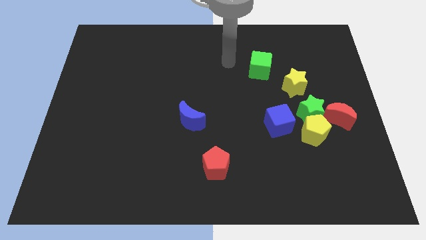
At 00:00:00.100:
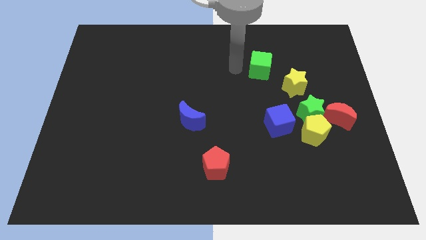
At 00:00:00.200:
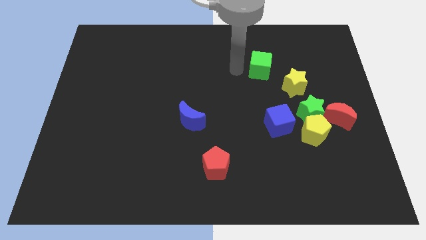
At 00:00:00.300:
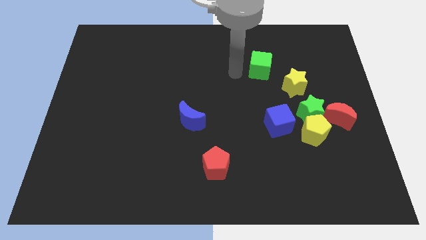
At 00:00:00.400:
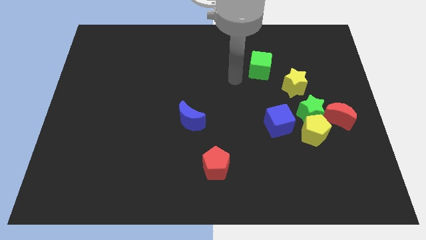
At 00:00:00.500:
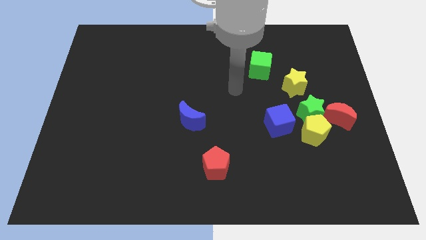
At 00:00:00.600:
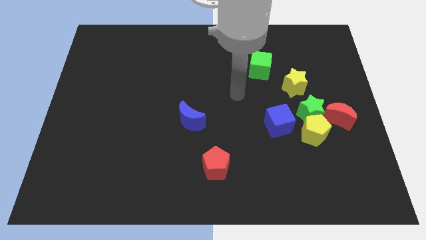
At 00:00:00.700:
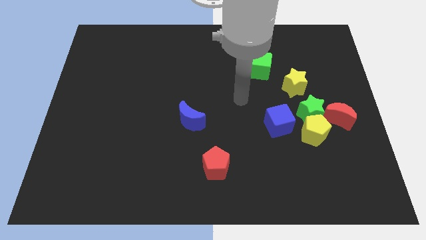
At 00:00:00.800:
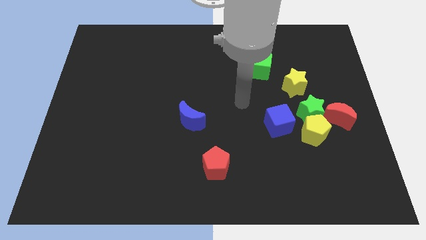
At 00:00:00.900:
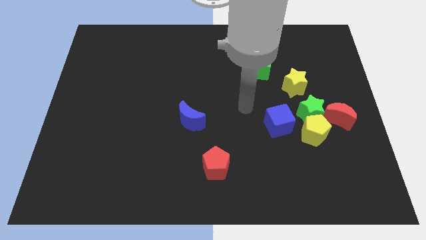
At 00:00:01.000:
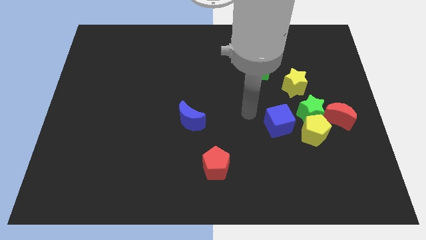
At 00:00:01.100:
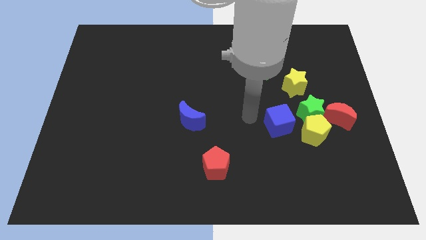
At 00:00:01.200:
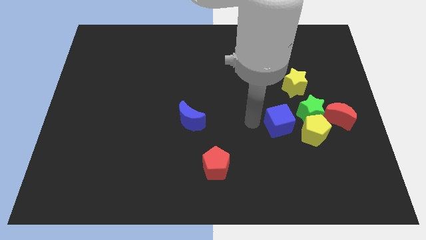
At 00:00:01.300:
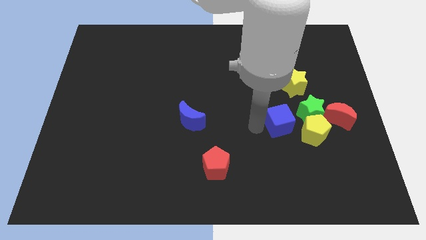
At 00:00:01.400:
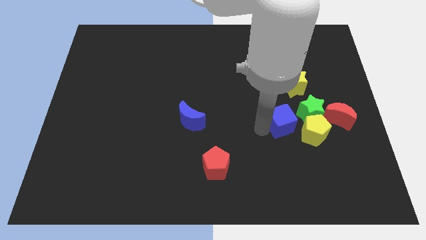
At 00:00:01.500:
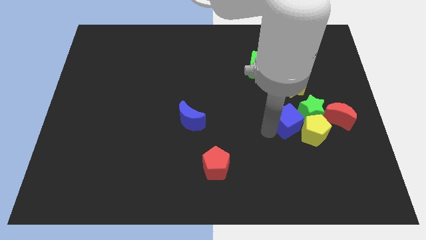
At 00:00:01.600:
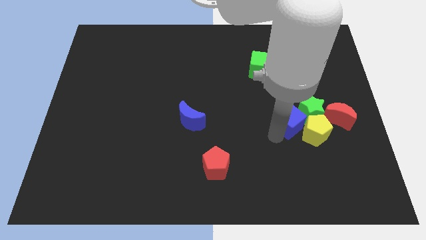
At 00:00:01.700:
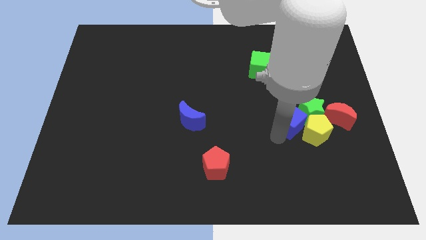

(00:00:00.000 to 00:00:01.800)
move the blue cube to the group of blocks

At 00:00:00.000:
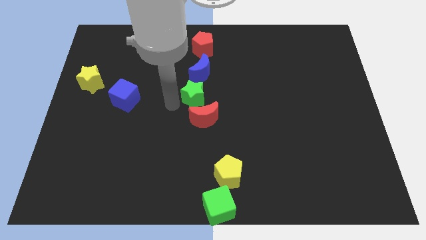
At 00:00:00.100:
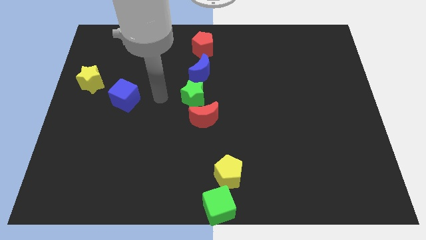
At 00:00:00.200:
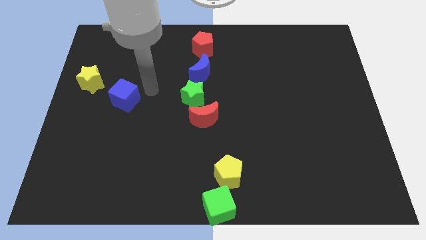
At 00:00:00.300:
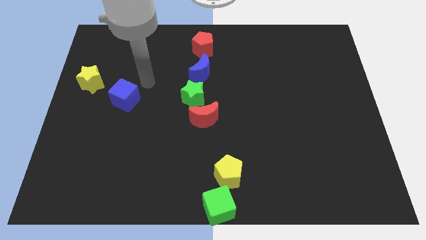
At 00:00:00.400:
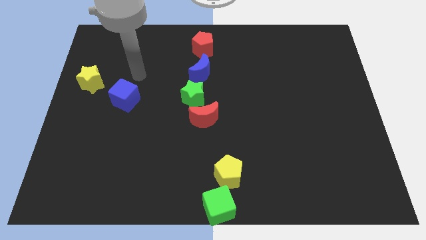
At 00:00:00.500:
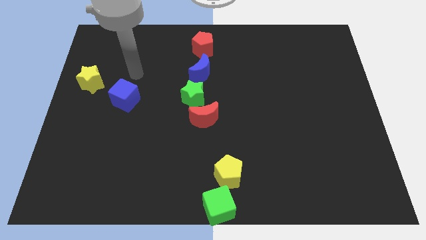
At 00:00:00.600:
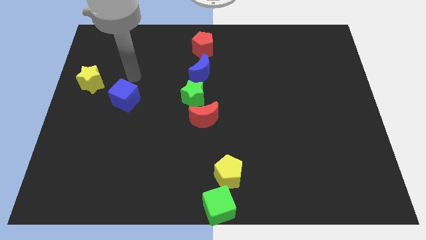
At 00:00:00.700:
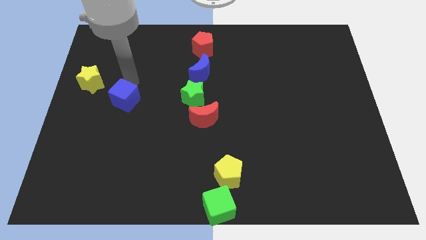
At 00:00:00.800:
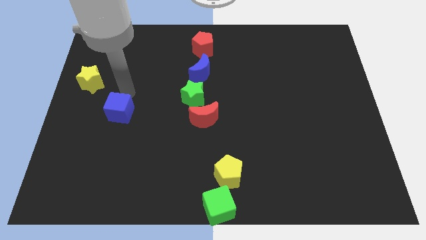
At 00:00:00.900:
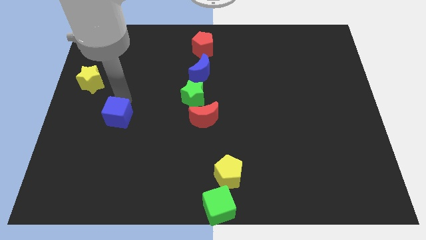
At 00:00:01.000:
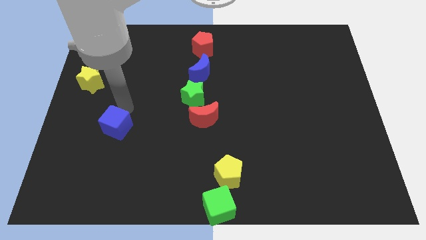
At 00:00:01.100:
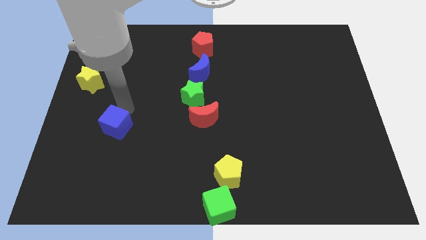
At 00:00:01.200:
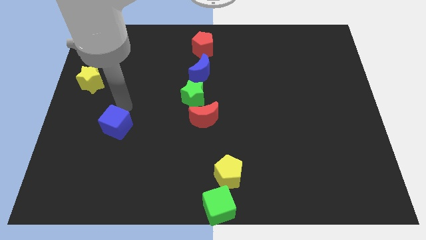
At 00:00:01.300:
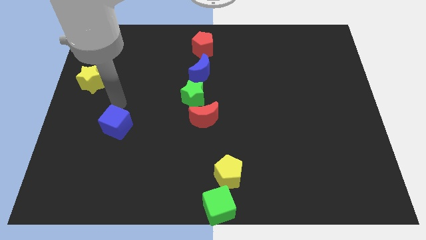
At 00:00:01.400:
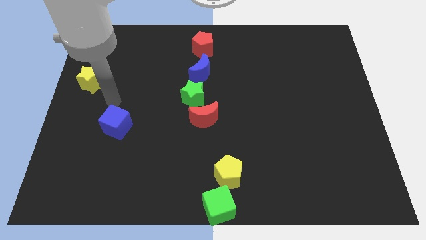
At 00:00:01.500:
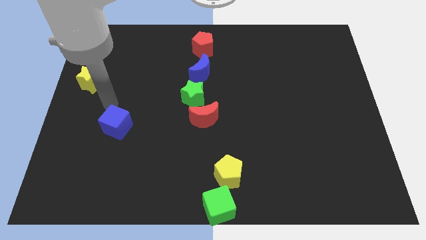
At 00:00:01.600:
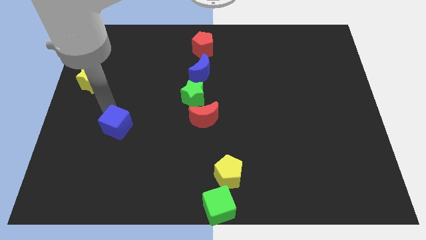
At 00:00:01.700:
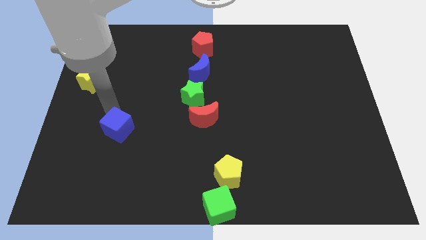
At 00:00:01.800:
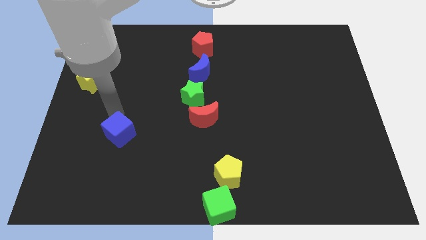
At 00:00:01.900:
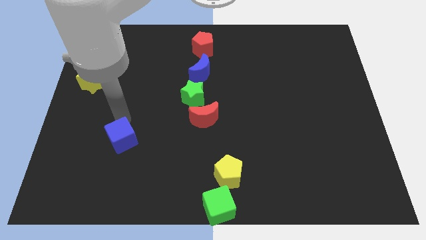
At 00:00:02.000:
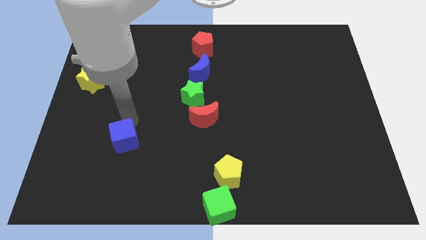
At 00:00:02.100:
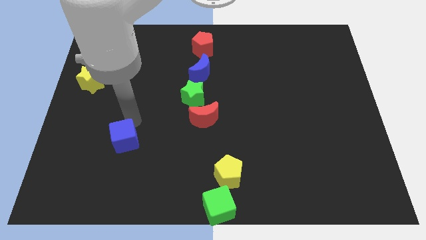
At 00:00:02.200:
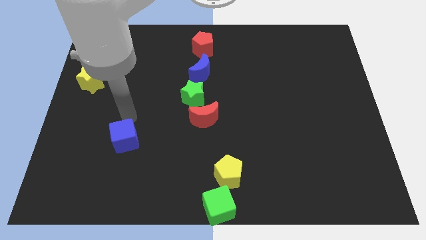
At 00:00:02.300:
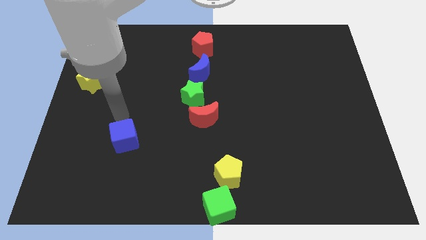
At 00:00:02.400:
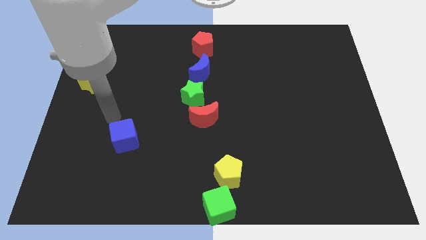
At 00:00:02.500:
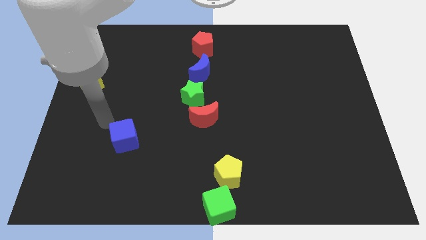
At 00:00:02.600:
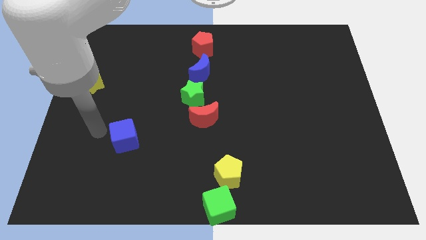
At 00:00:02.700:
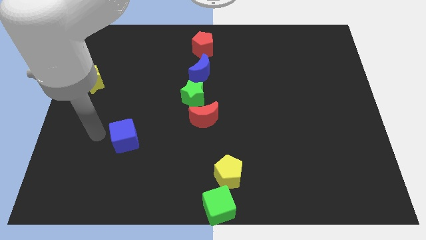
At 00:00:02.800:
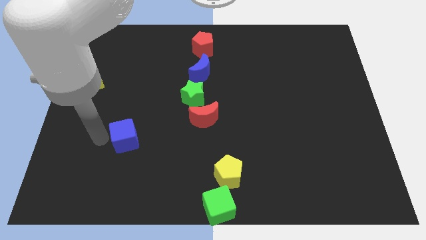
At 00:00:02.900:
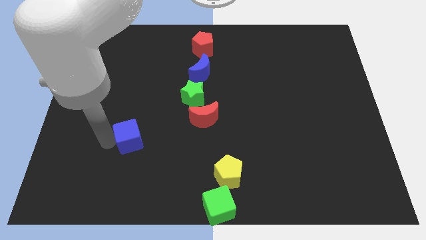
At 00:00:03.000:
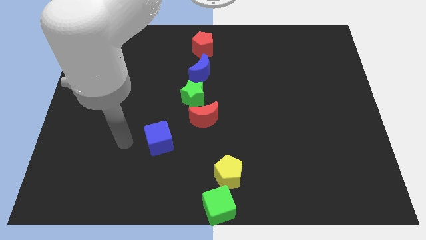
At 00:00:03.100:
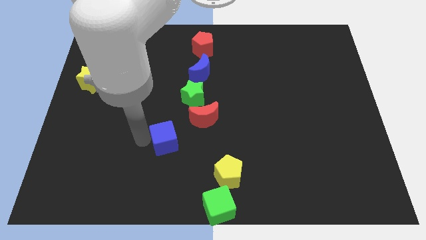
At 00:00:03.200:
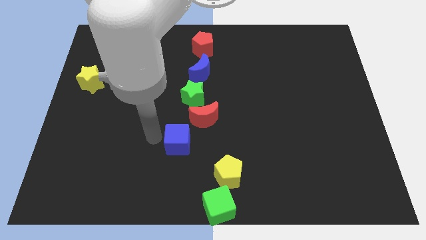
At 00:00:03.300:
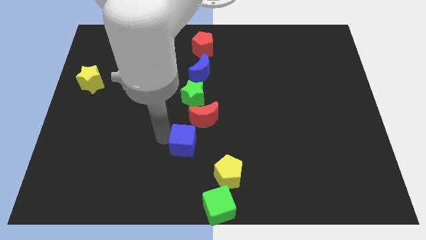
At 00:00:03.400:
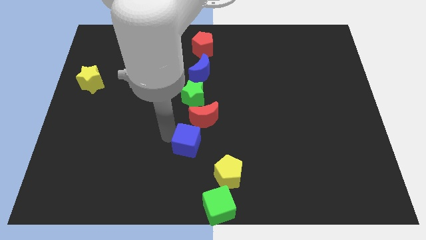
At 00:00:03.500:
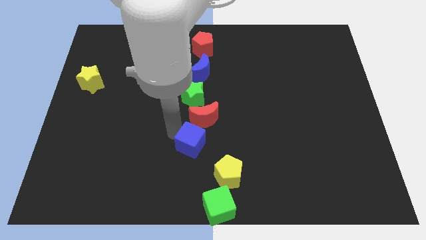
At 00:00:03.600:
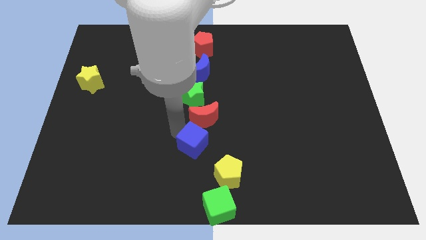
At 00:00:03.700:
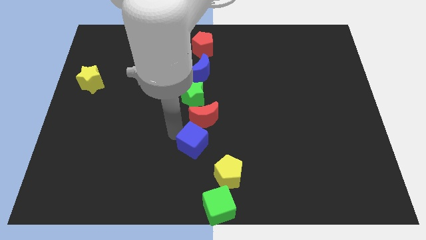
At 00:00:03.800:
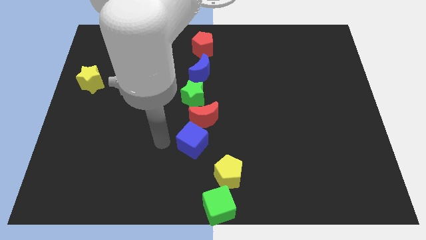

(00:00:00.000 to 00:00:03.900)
place blue cube to the bottom of red moon

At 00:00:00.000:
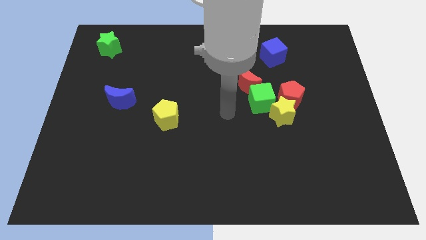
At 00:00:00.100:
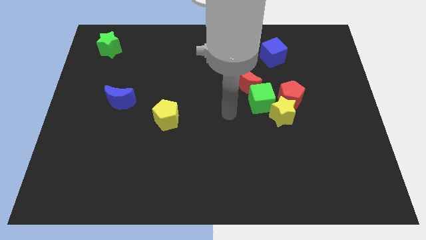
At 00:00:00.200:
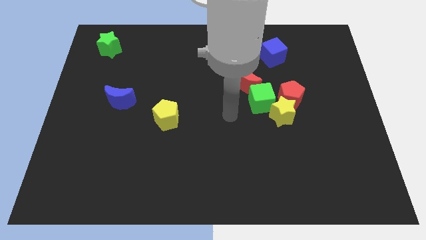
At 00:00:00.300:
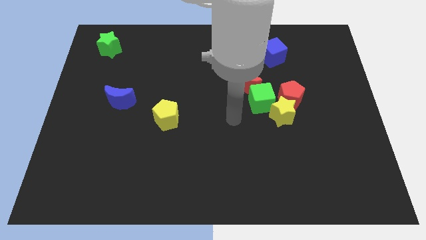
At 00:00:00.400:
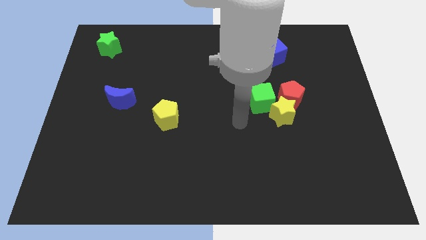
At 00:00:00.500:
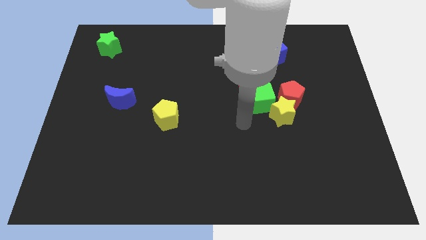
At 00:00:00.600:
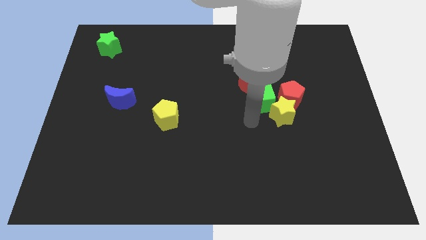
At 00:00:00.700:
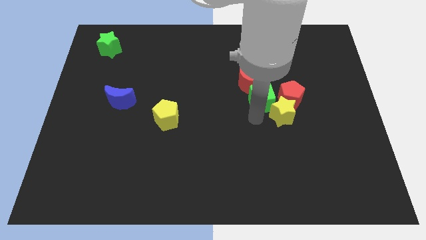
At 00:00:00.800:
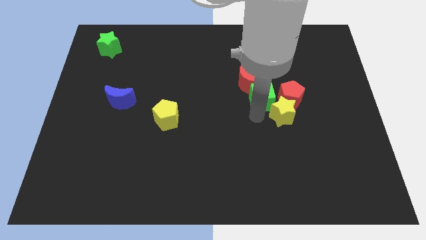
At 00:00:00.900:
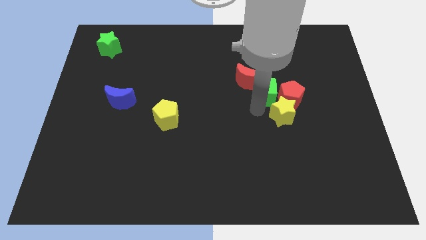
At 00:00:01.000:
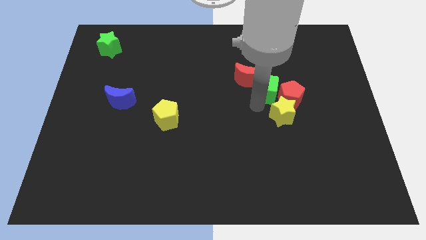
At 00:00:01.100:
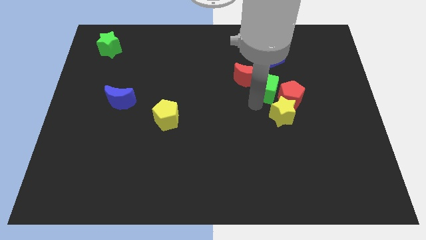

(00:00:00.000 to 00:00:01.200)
push green cube towards its top

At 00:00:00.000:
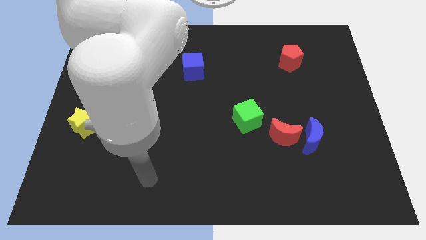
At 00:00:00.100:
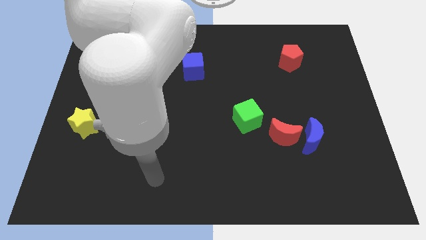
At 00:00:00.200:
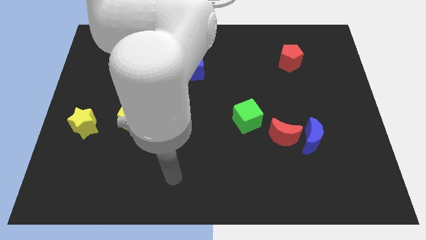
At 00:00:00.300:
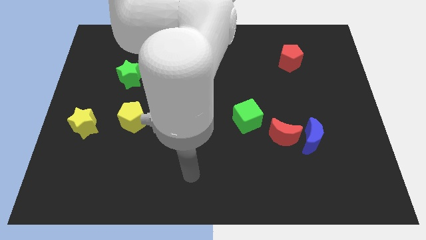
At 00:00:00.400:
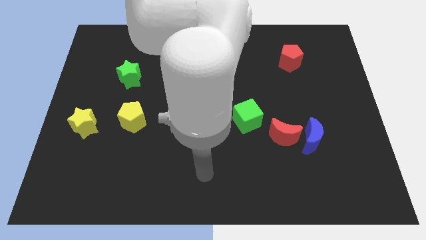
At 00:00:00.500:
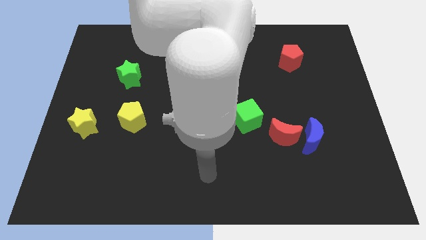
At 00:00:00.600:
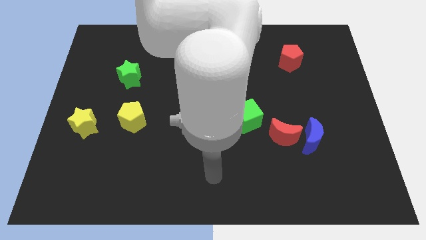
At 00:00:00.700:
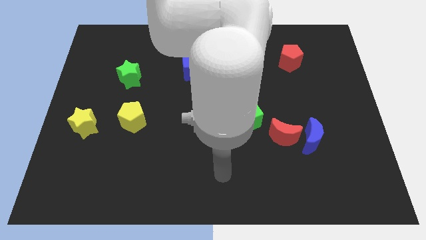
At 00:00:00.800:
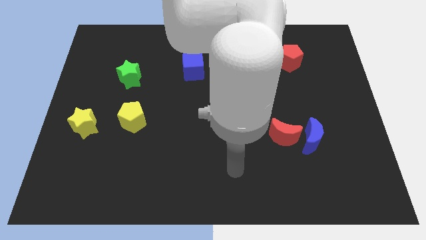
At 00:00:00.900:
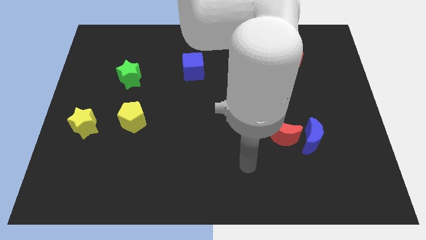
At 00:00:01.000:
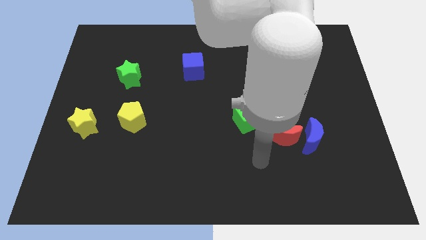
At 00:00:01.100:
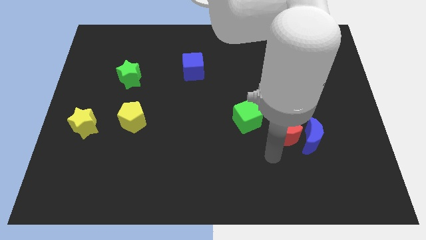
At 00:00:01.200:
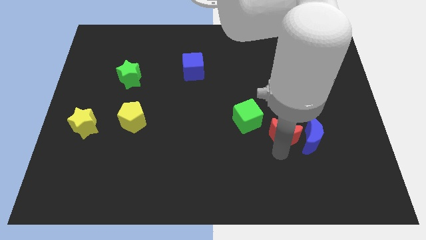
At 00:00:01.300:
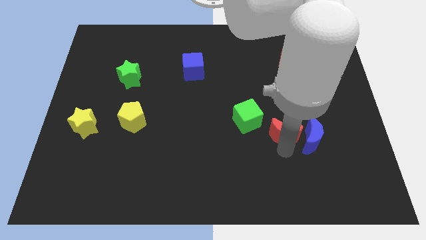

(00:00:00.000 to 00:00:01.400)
place the arm below the red moon

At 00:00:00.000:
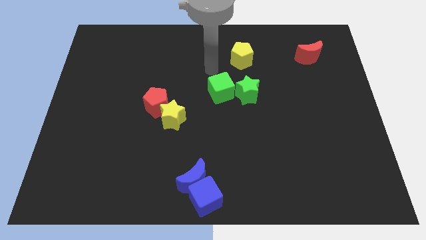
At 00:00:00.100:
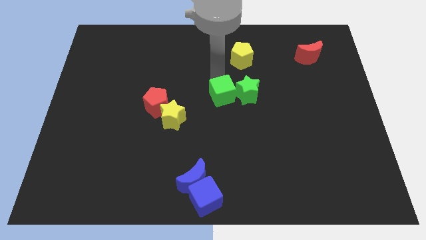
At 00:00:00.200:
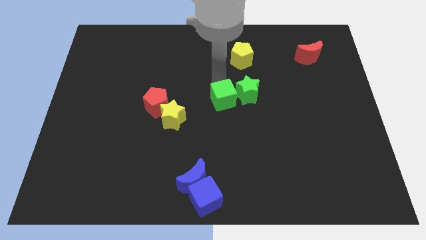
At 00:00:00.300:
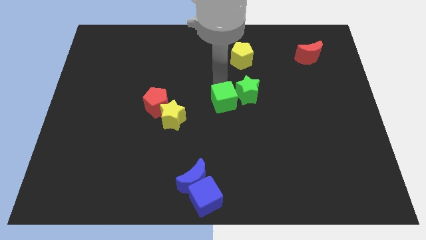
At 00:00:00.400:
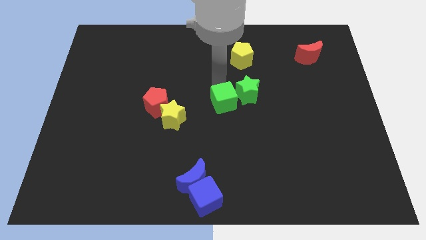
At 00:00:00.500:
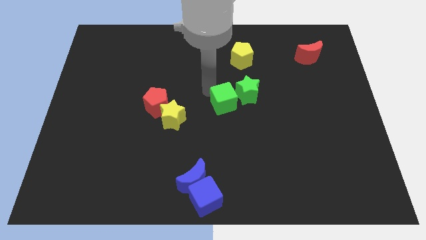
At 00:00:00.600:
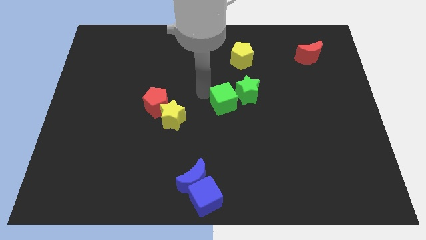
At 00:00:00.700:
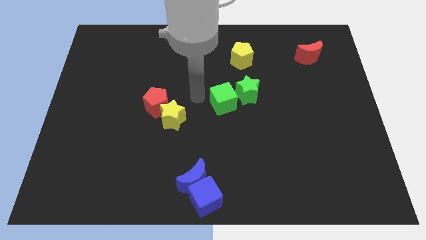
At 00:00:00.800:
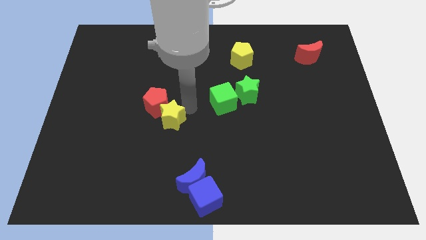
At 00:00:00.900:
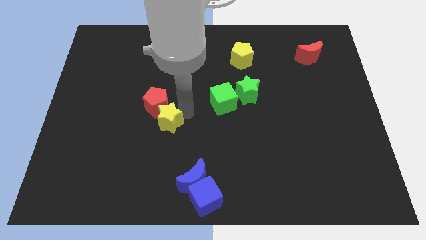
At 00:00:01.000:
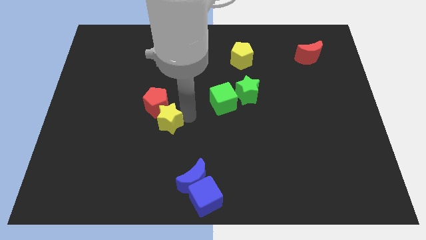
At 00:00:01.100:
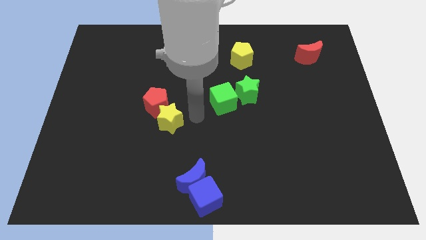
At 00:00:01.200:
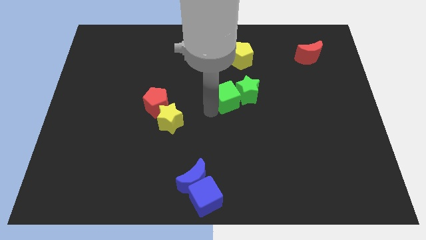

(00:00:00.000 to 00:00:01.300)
place the green cube left to the green star
